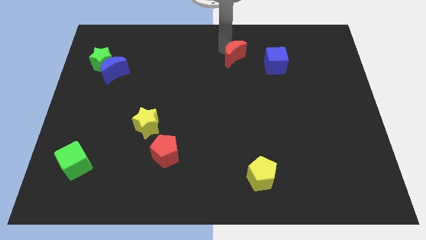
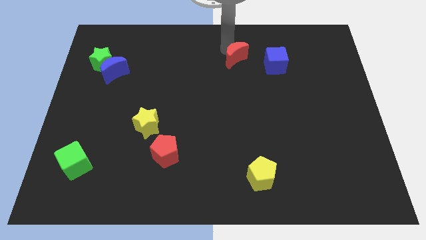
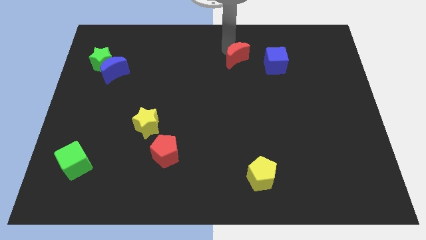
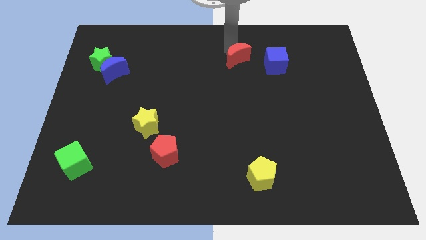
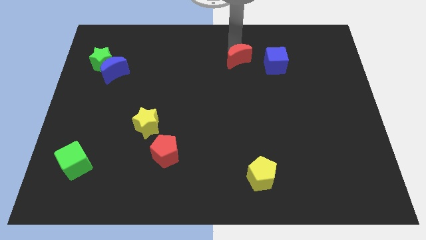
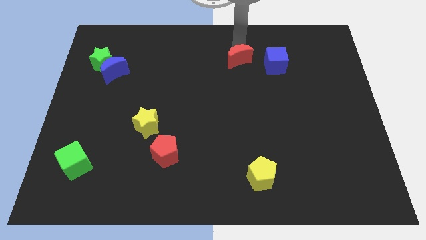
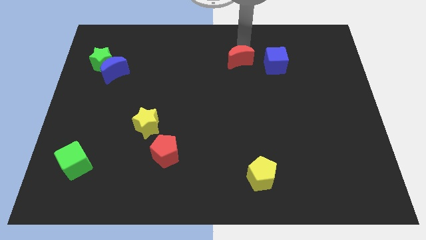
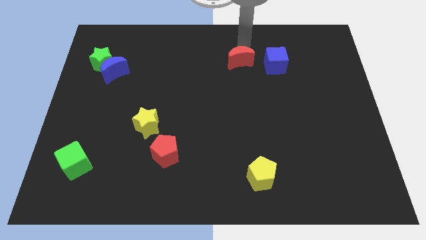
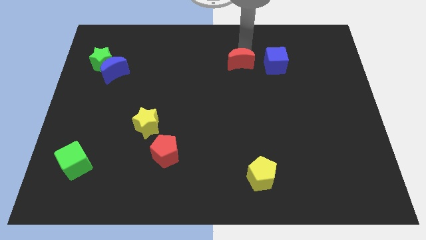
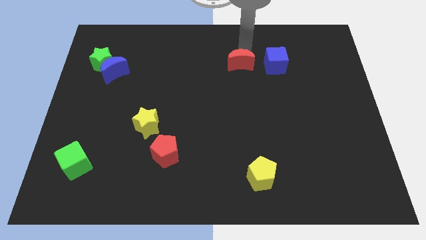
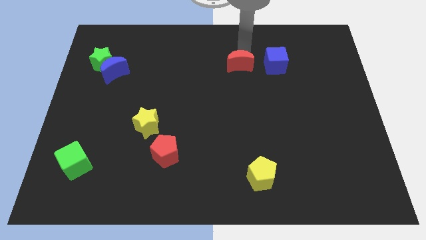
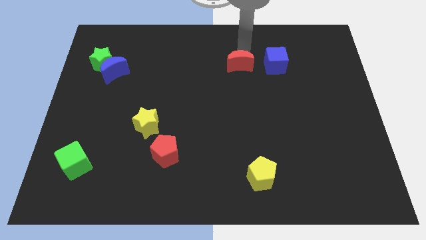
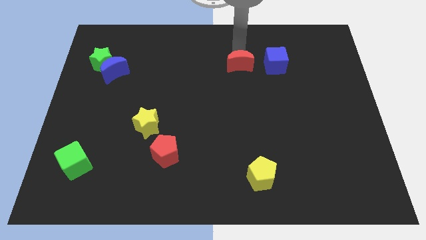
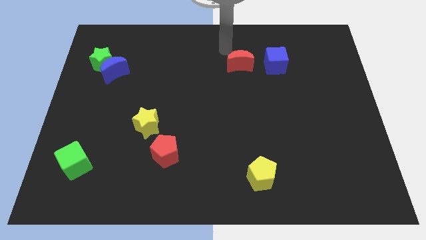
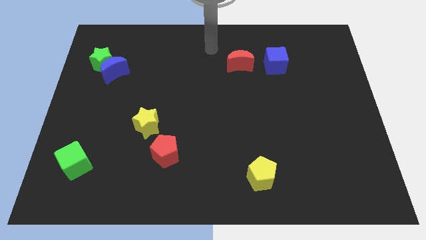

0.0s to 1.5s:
place the red crescent to the left side of the blue cube

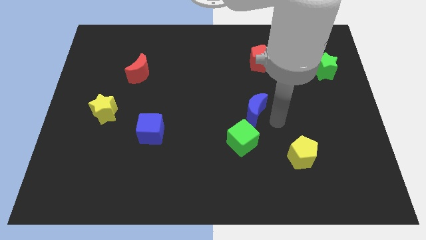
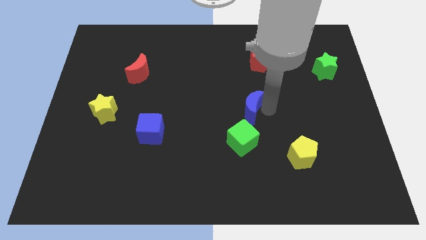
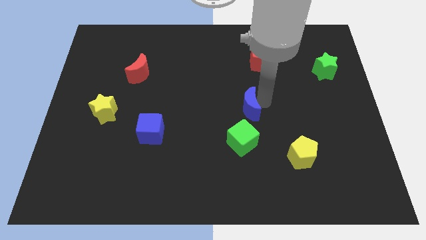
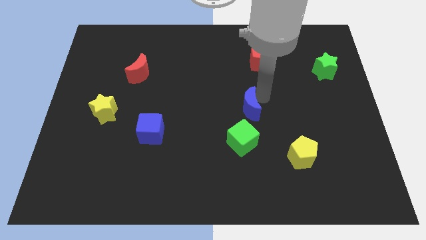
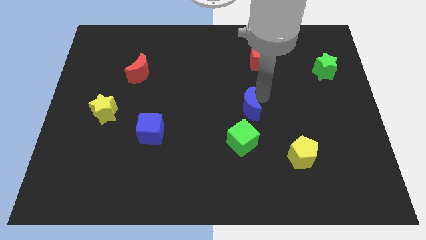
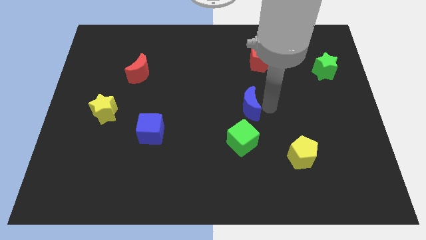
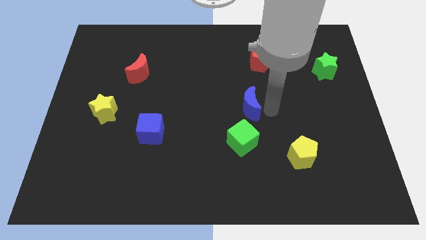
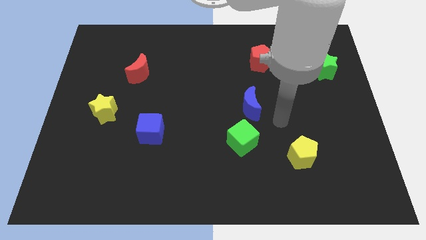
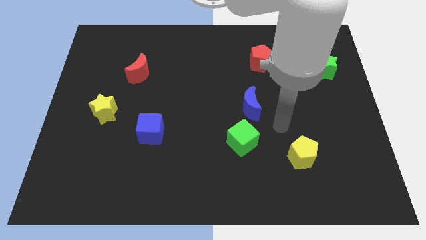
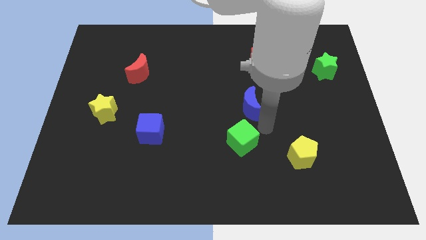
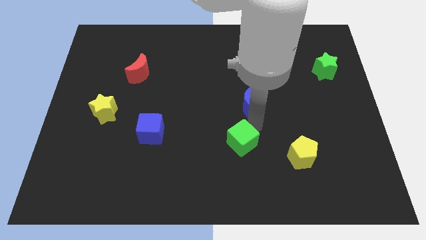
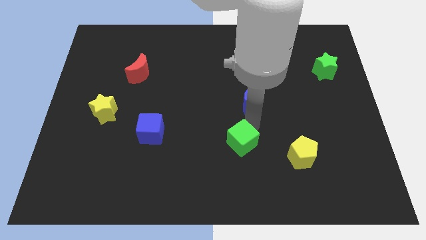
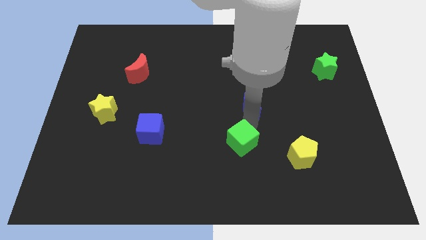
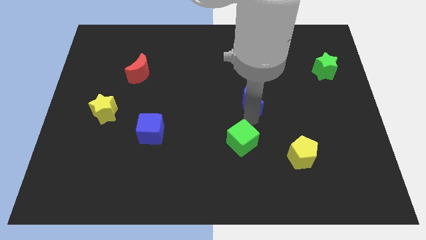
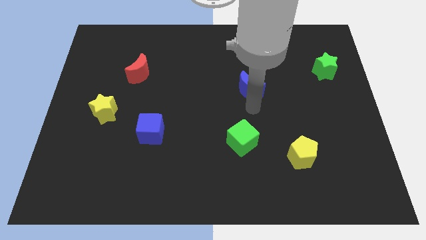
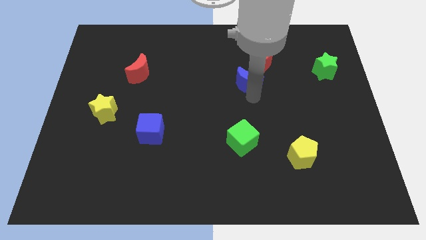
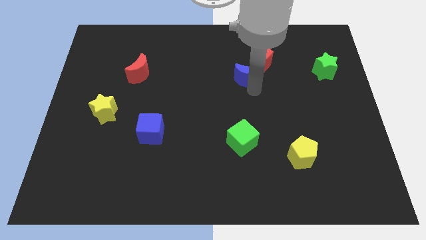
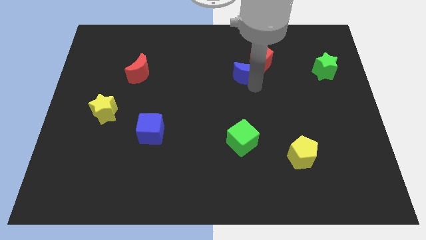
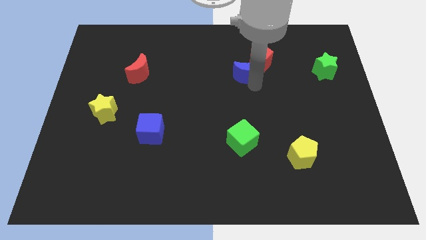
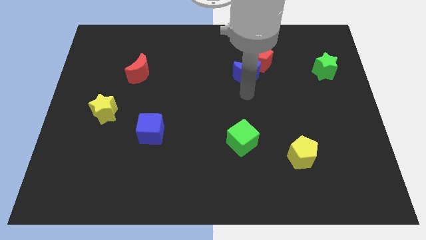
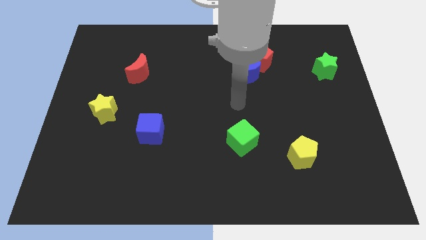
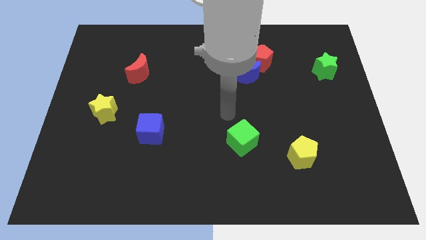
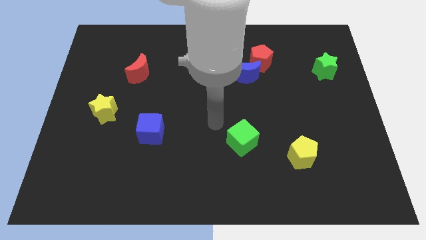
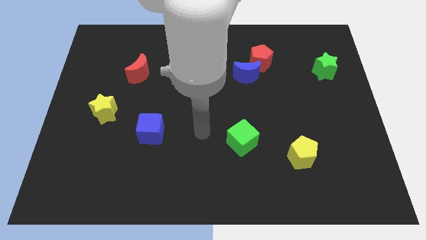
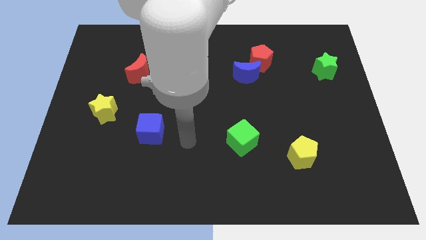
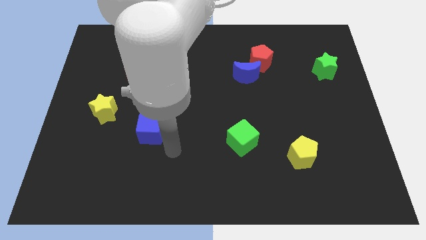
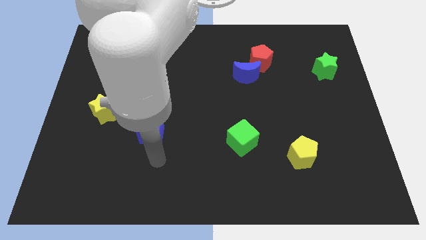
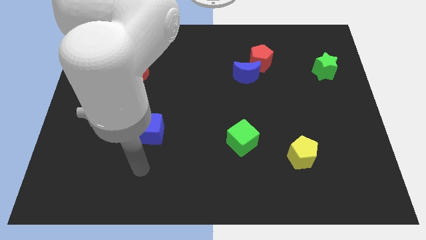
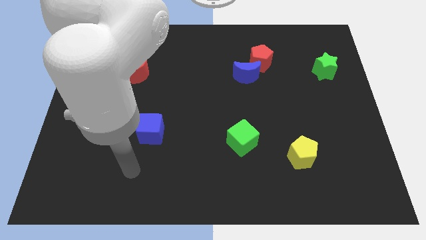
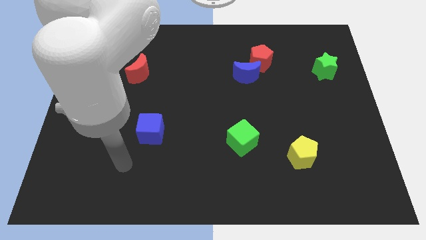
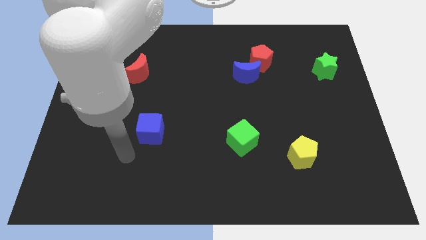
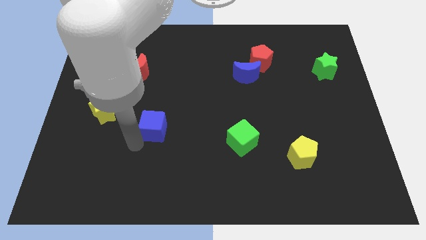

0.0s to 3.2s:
move your arm to the bottom of the blue cube

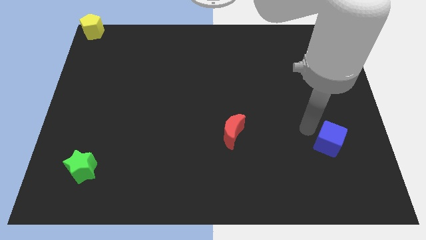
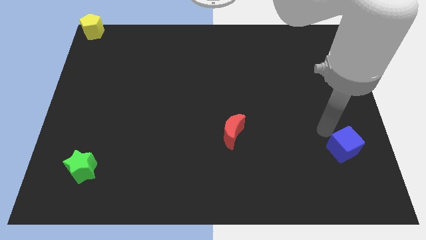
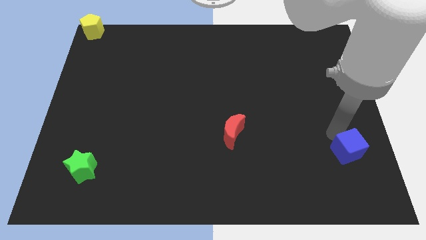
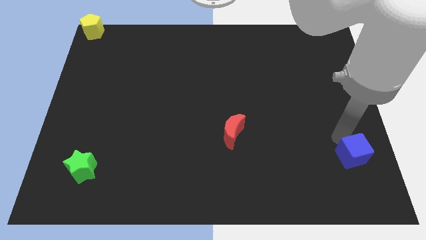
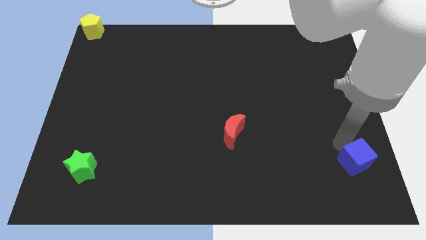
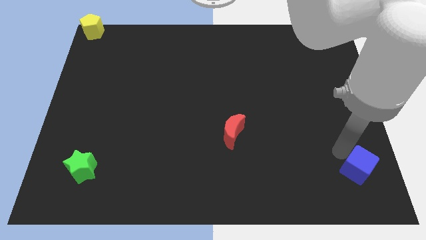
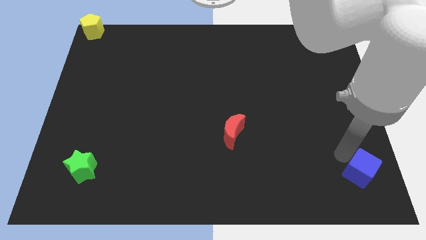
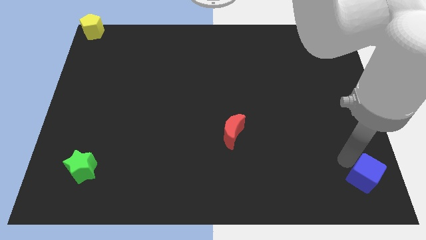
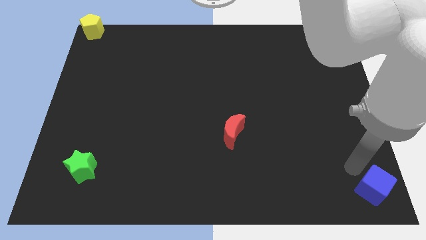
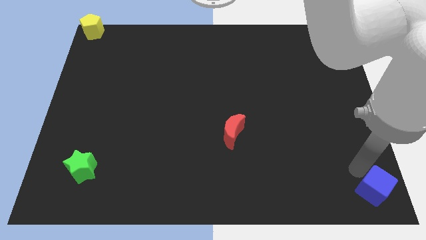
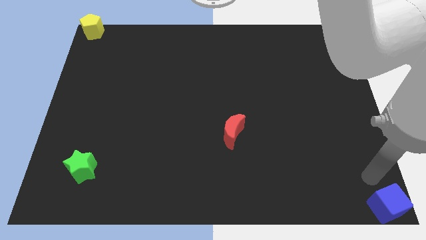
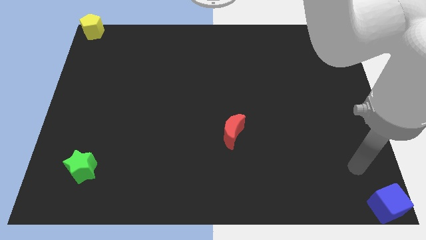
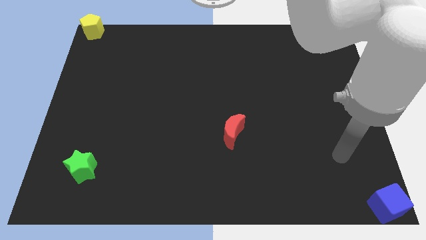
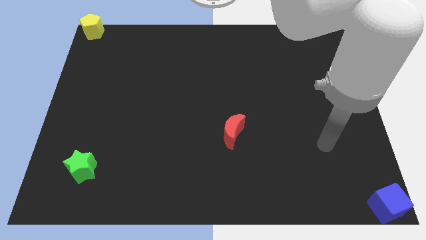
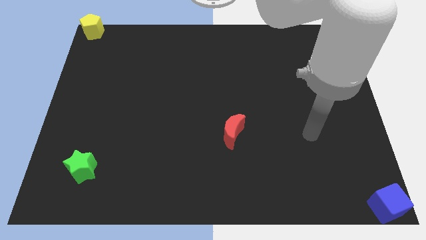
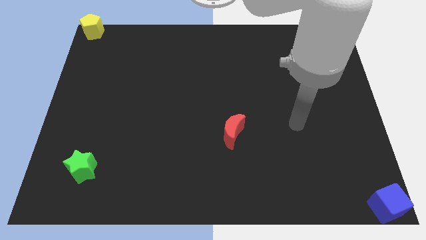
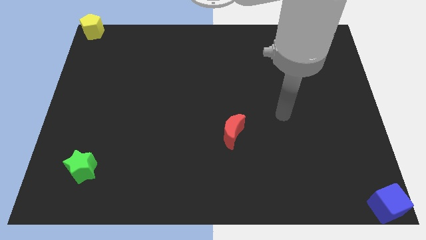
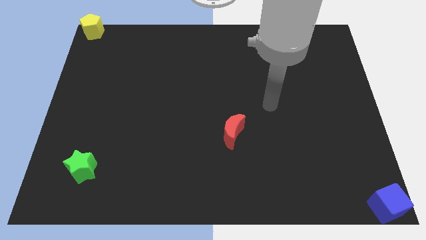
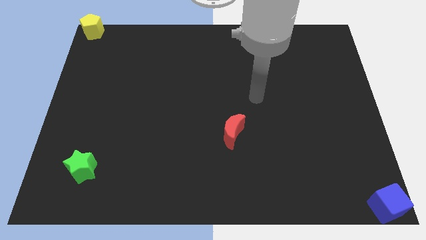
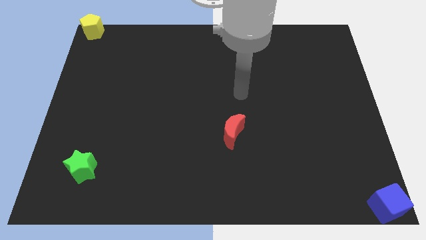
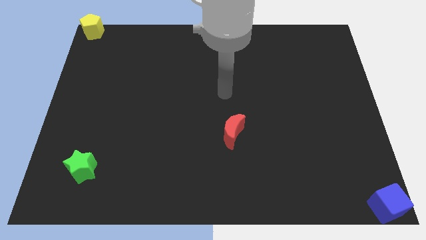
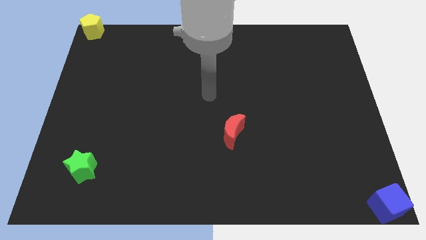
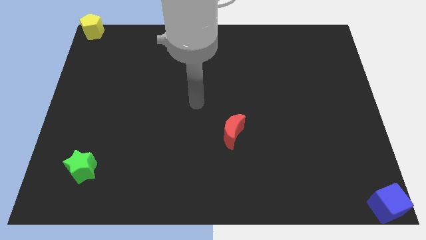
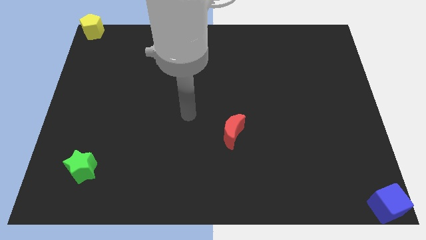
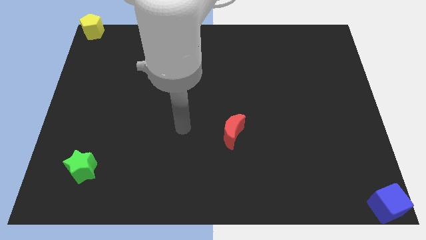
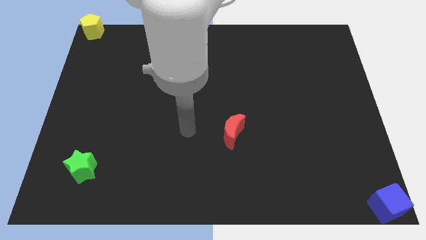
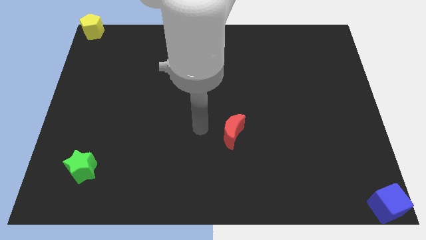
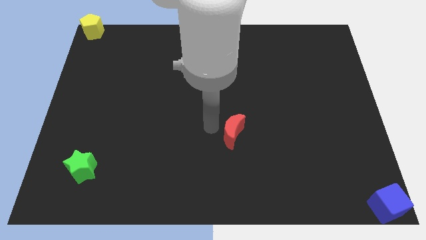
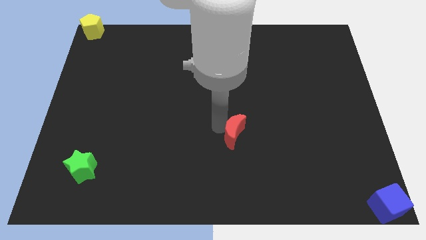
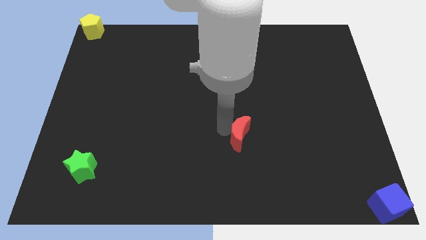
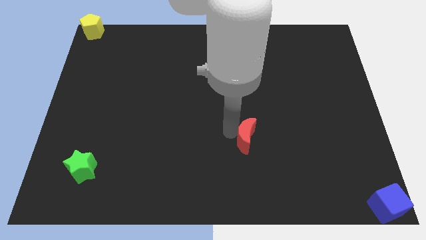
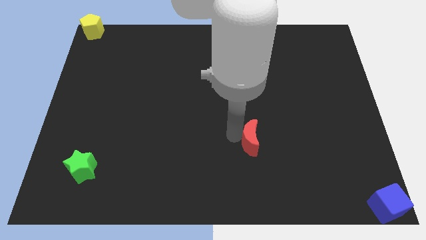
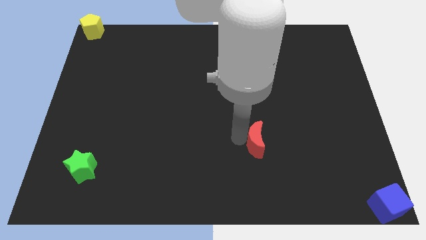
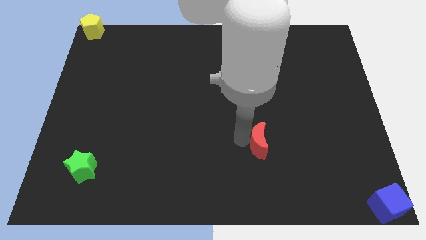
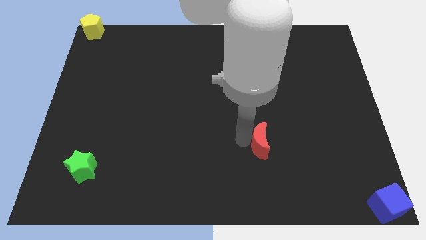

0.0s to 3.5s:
push the blue cube to the bottom right

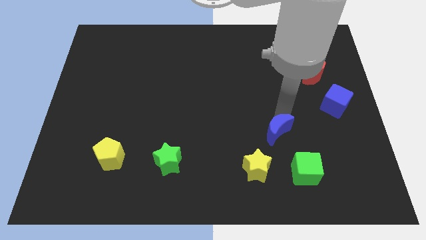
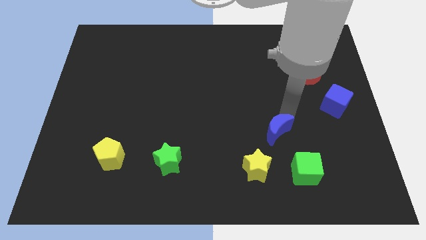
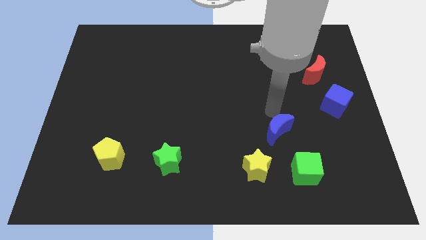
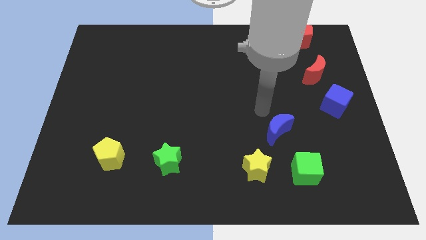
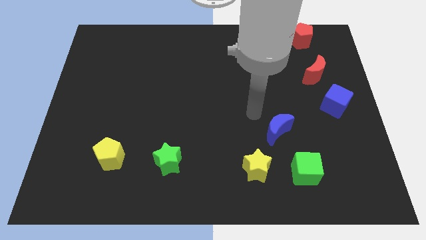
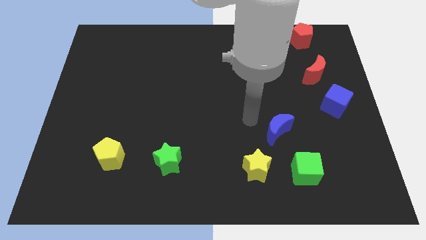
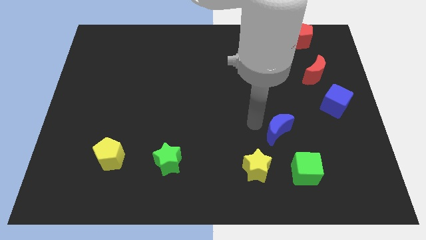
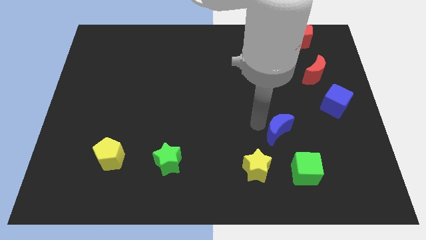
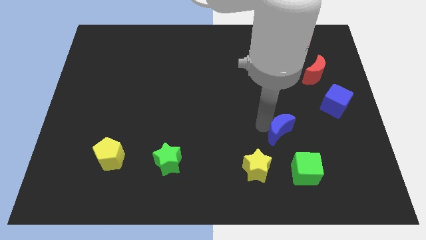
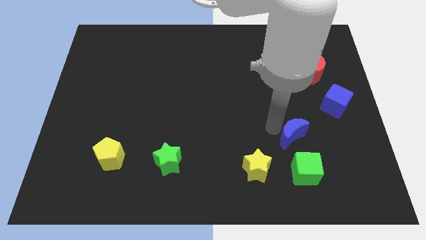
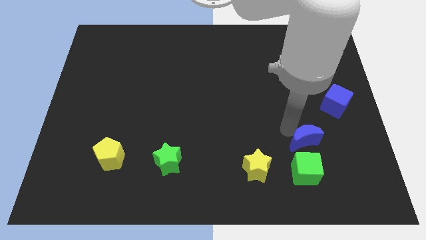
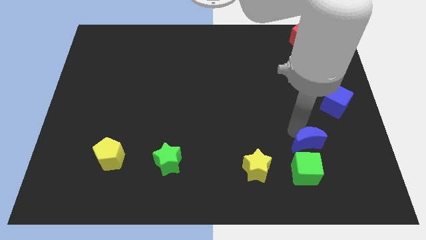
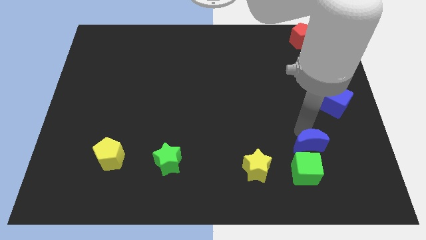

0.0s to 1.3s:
place the blue crescent above the green cube
